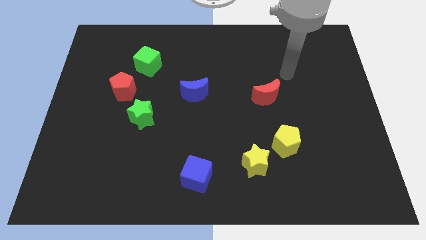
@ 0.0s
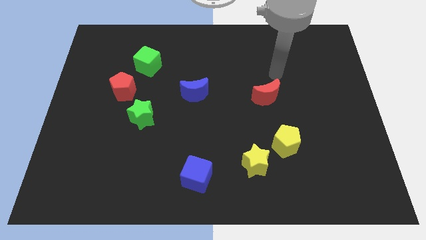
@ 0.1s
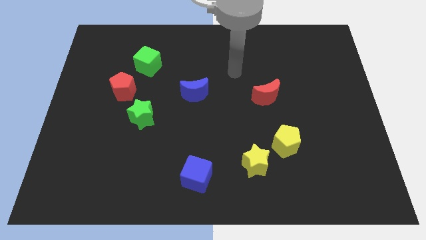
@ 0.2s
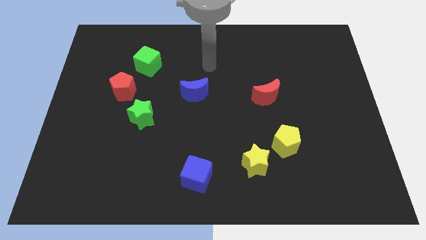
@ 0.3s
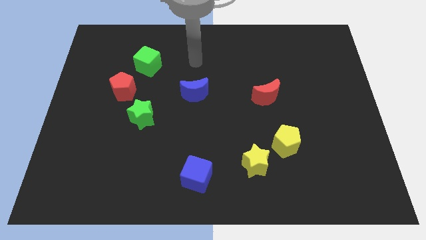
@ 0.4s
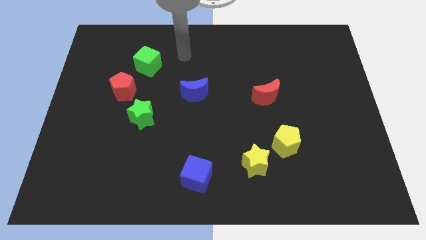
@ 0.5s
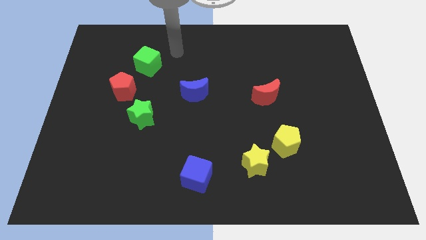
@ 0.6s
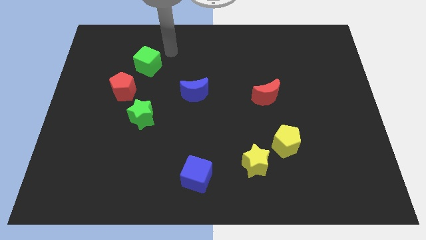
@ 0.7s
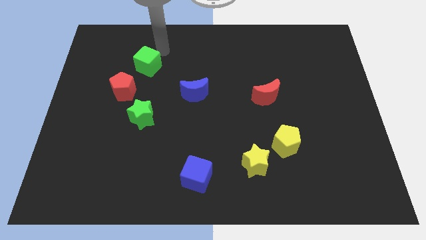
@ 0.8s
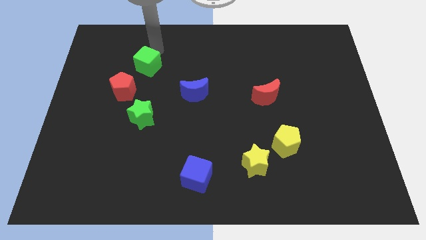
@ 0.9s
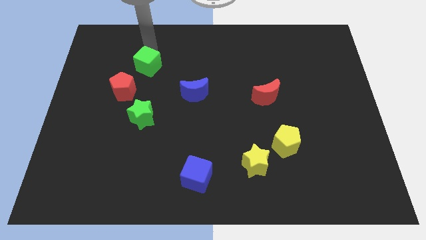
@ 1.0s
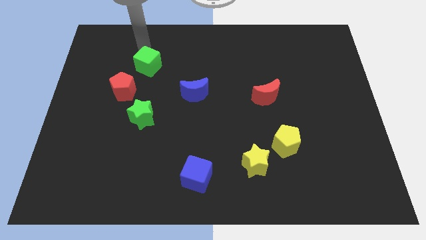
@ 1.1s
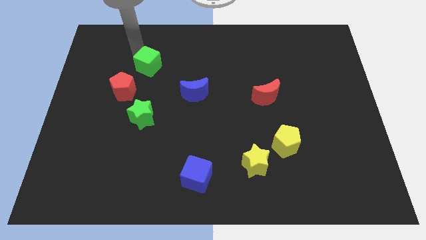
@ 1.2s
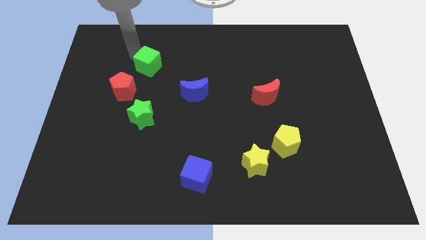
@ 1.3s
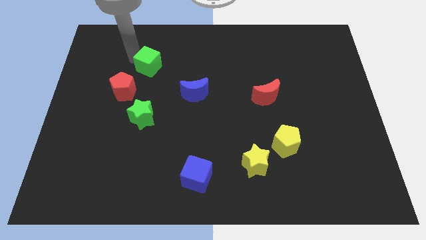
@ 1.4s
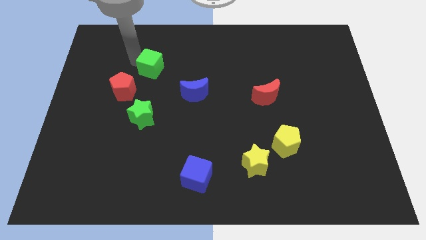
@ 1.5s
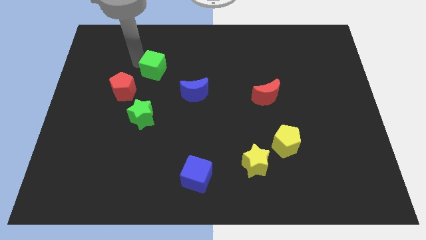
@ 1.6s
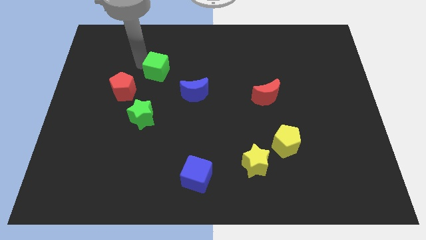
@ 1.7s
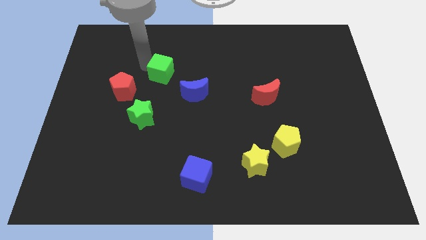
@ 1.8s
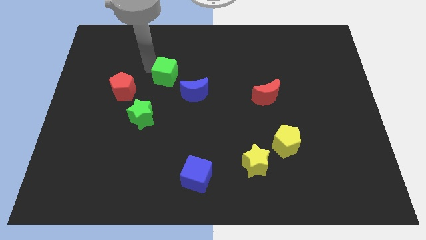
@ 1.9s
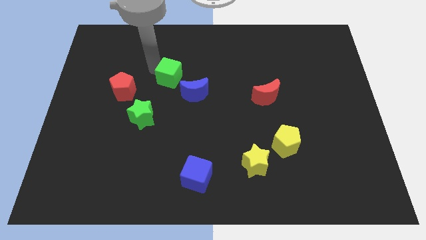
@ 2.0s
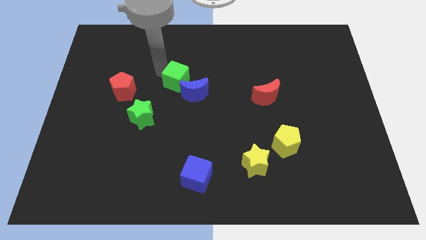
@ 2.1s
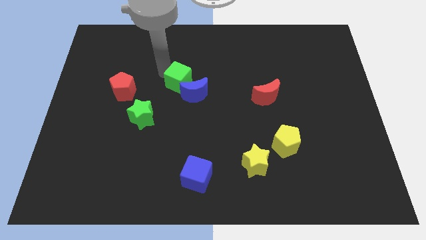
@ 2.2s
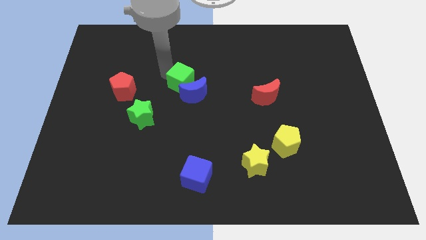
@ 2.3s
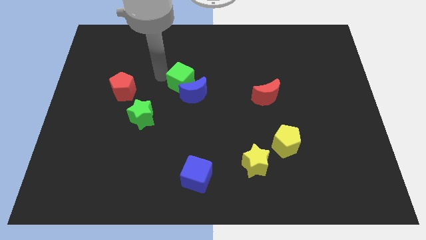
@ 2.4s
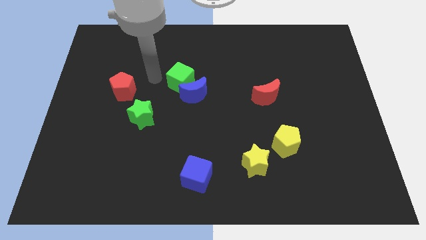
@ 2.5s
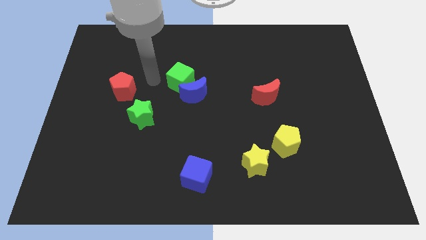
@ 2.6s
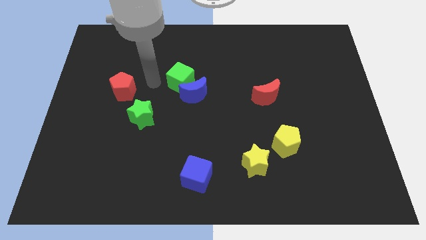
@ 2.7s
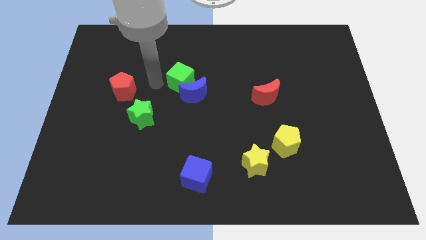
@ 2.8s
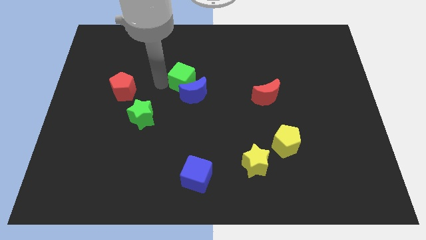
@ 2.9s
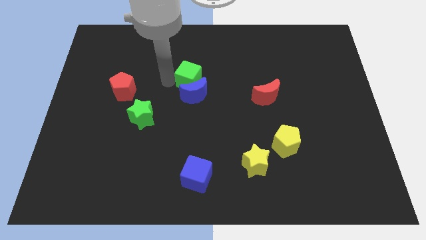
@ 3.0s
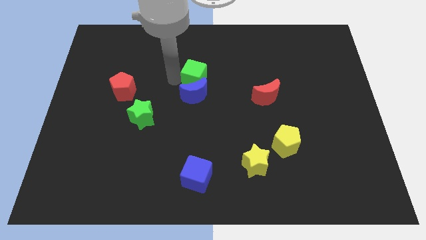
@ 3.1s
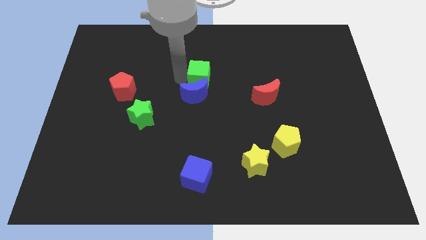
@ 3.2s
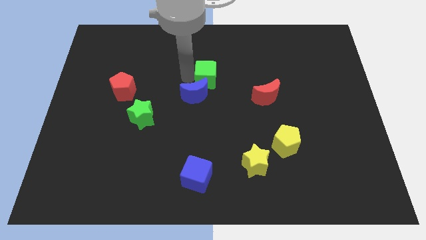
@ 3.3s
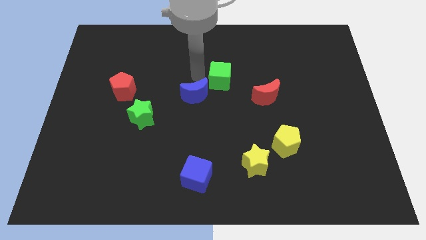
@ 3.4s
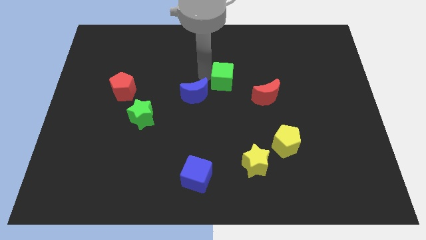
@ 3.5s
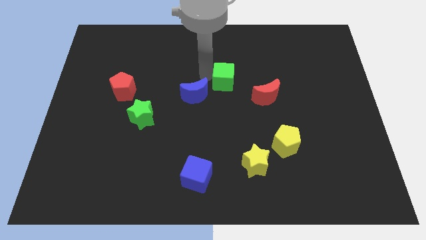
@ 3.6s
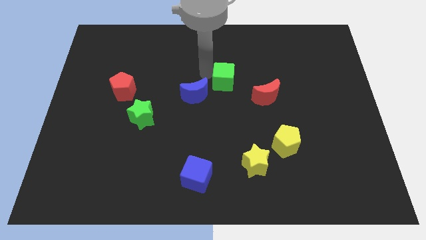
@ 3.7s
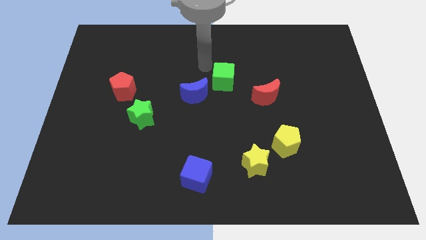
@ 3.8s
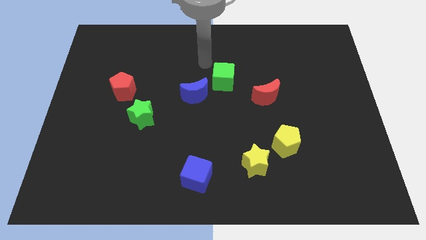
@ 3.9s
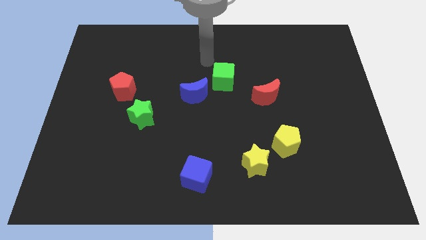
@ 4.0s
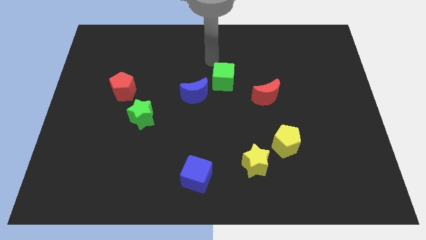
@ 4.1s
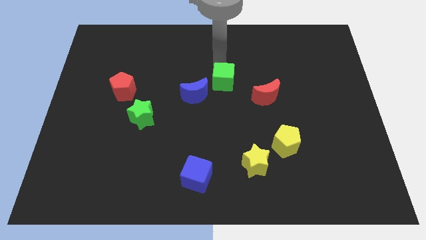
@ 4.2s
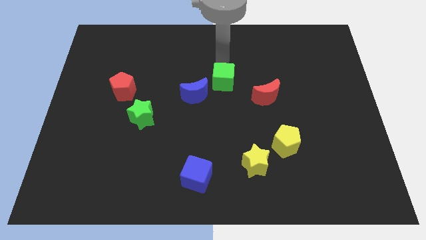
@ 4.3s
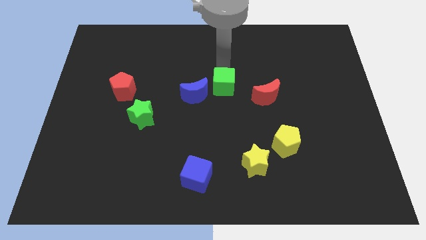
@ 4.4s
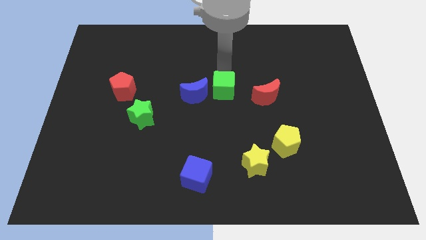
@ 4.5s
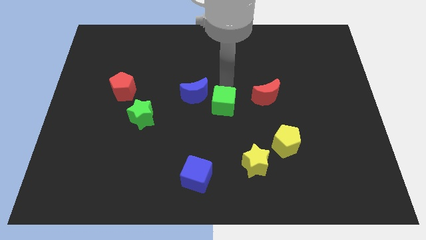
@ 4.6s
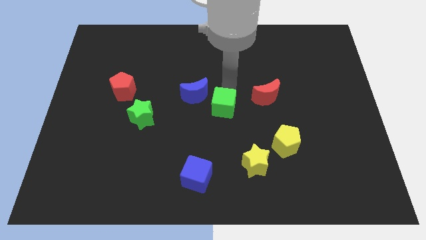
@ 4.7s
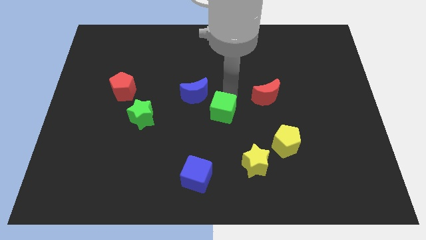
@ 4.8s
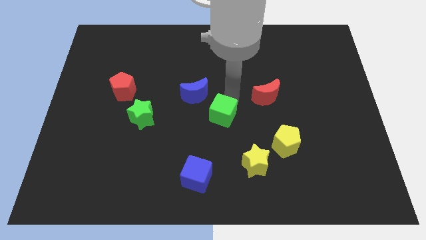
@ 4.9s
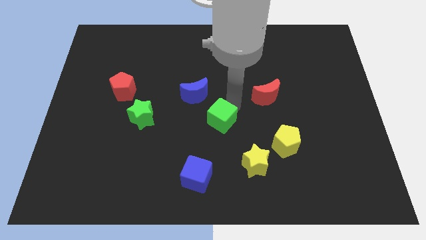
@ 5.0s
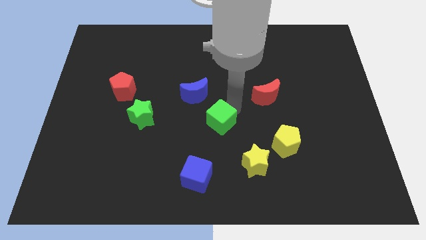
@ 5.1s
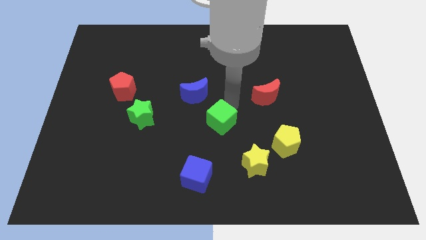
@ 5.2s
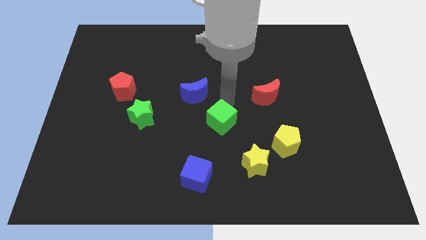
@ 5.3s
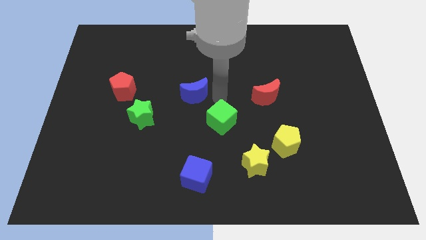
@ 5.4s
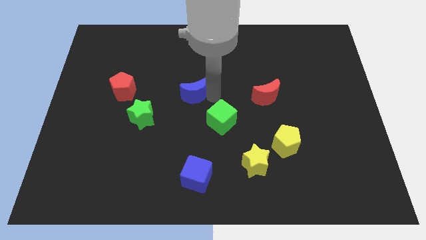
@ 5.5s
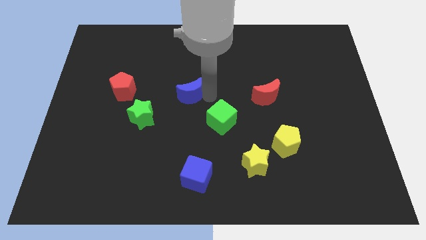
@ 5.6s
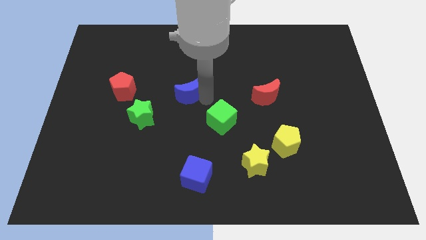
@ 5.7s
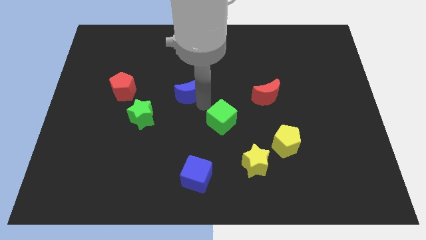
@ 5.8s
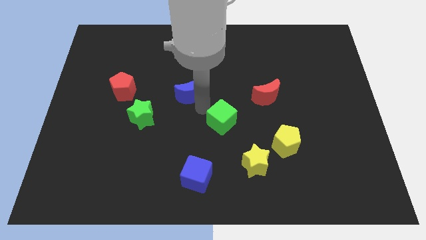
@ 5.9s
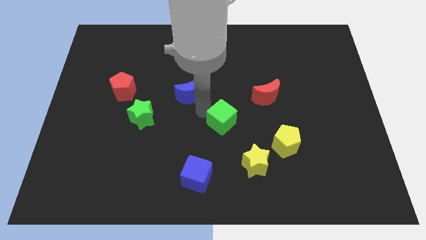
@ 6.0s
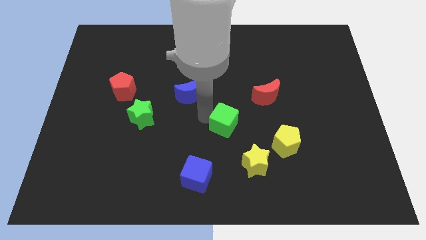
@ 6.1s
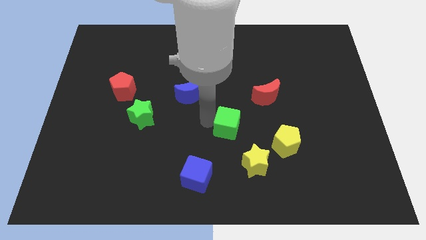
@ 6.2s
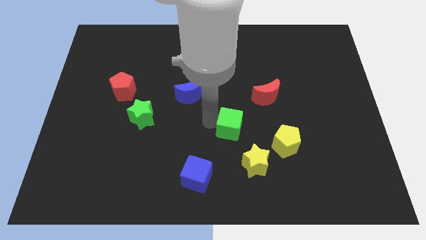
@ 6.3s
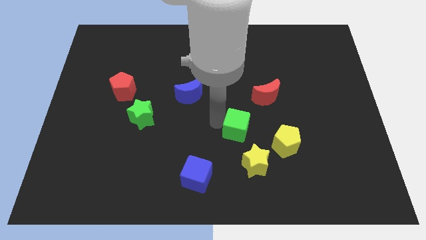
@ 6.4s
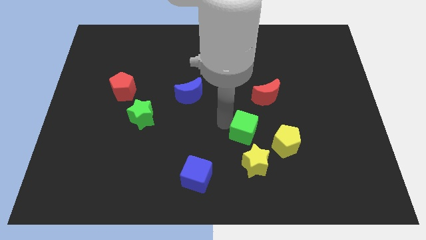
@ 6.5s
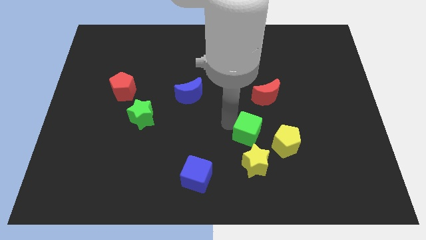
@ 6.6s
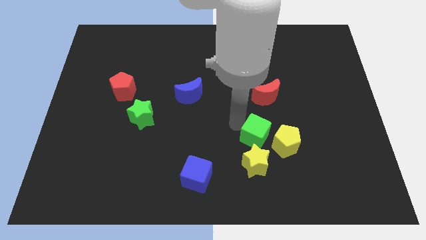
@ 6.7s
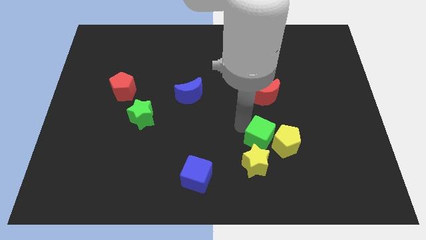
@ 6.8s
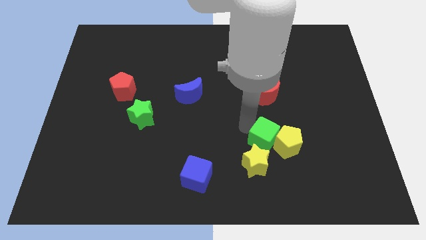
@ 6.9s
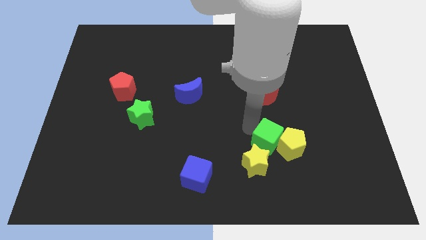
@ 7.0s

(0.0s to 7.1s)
slide the green cube to the yellow pentagon

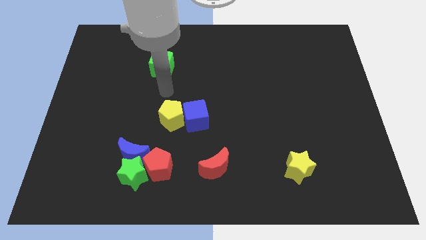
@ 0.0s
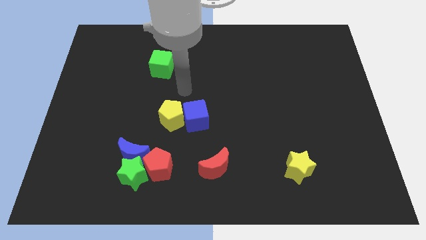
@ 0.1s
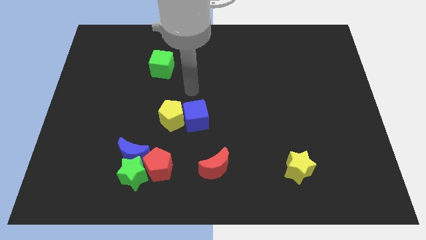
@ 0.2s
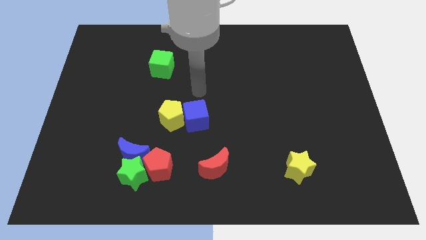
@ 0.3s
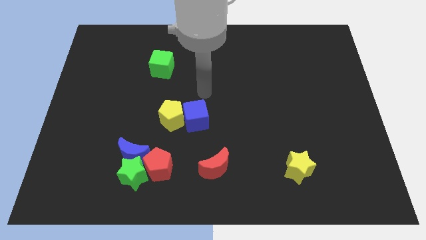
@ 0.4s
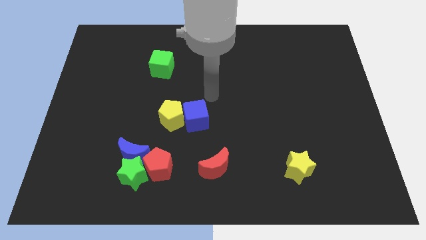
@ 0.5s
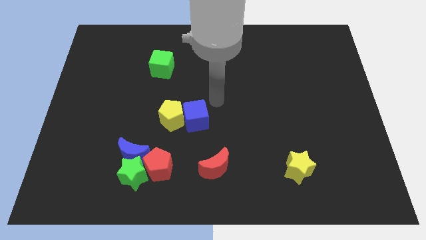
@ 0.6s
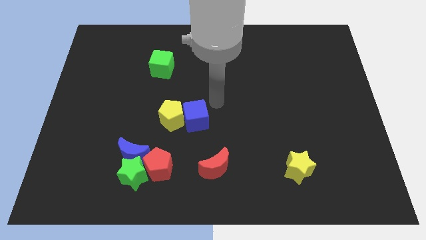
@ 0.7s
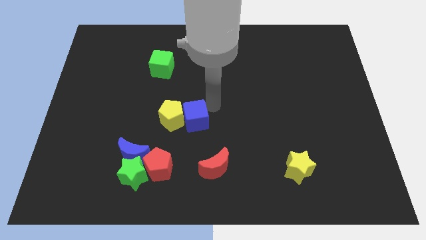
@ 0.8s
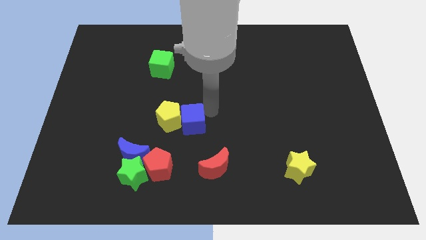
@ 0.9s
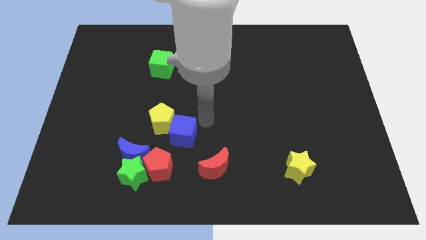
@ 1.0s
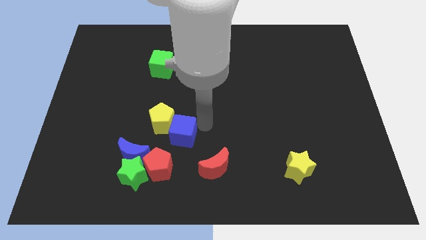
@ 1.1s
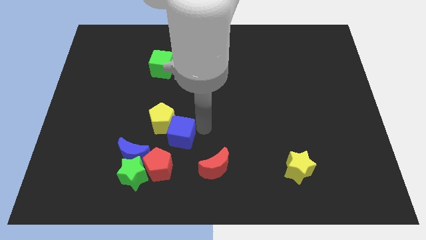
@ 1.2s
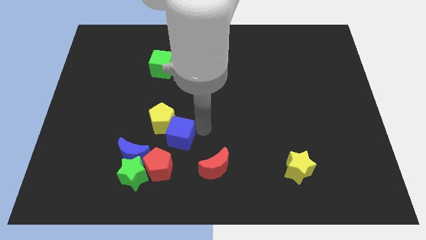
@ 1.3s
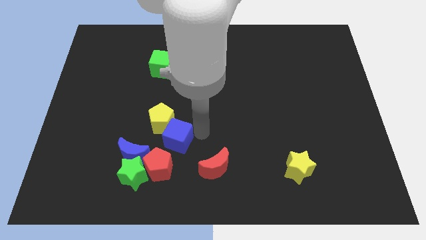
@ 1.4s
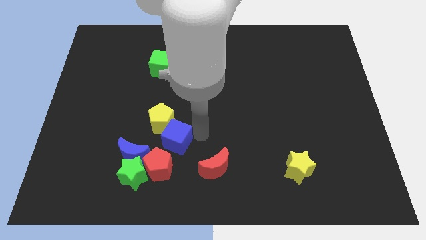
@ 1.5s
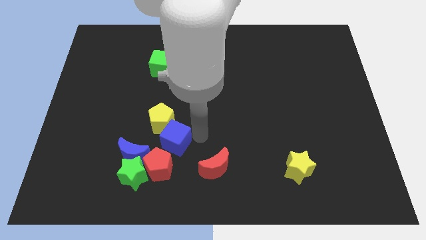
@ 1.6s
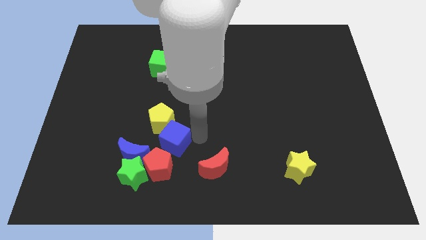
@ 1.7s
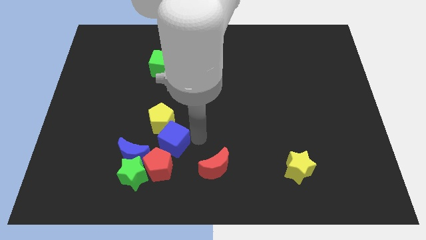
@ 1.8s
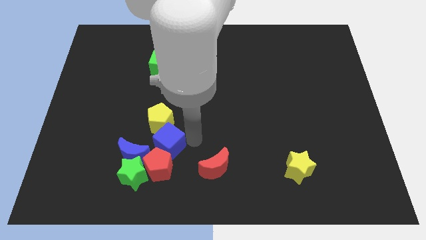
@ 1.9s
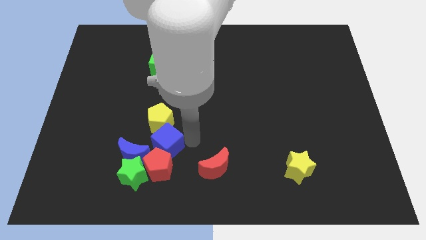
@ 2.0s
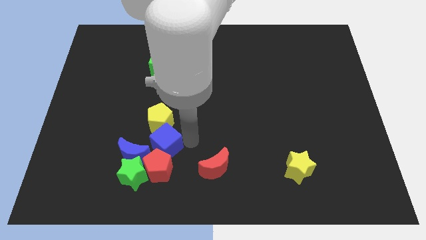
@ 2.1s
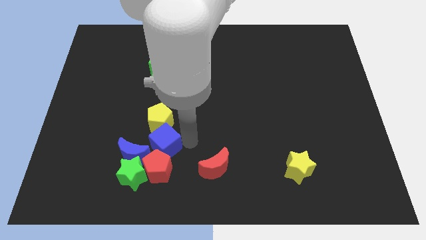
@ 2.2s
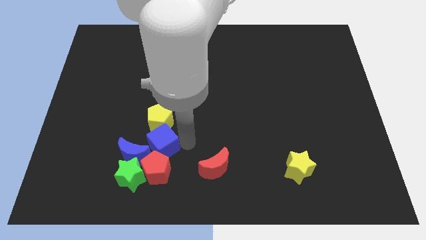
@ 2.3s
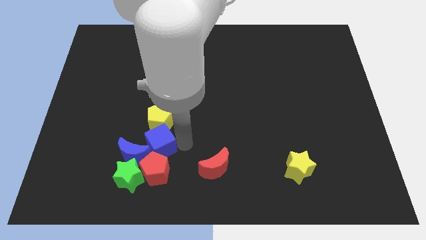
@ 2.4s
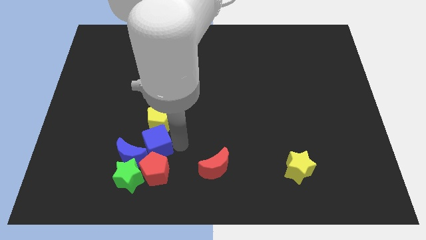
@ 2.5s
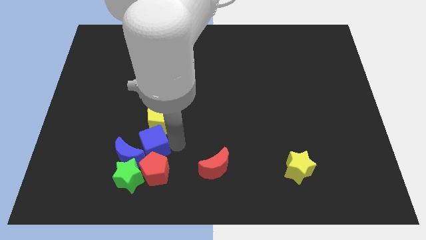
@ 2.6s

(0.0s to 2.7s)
slide the blue cube close to the blue moon
